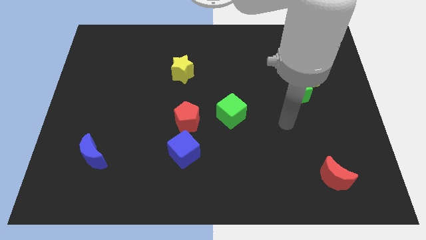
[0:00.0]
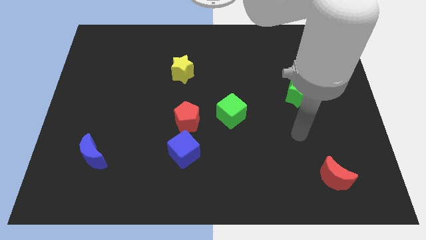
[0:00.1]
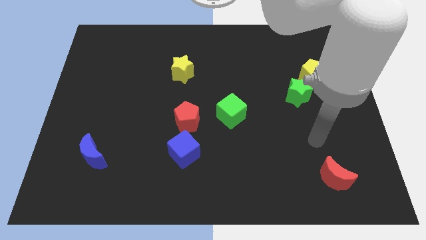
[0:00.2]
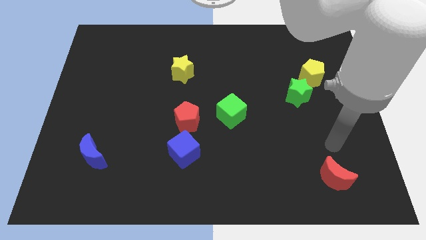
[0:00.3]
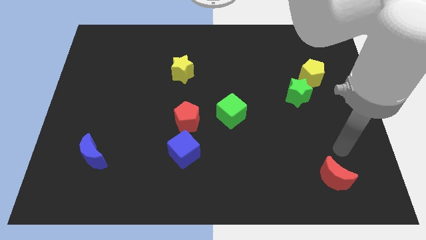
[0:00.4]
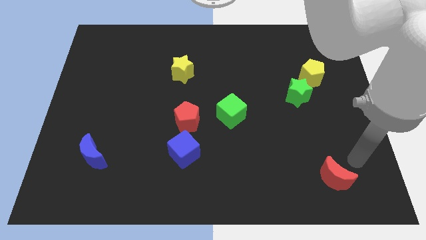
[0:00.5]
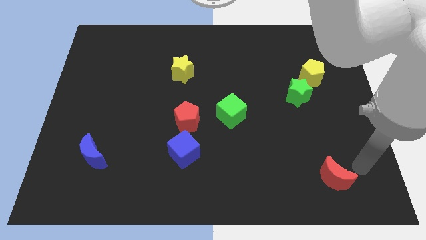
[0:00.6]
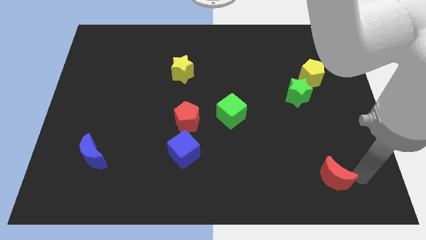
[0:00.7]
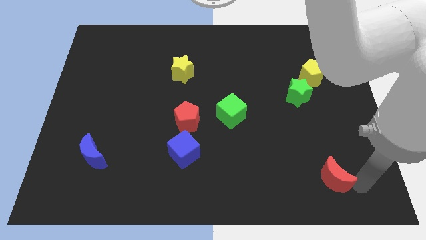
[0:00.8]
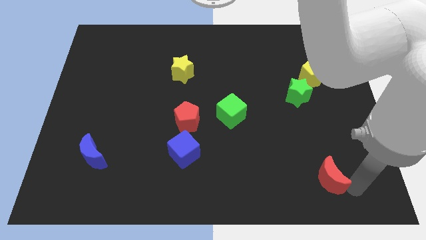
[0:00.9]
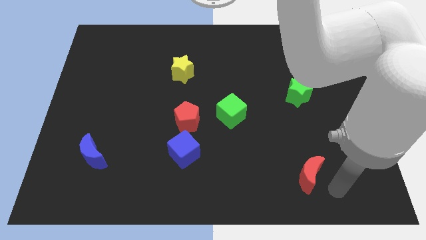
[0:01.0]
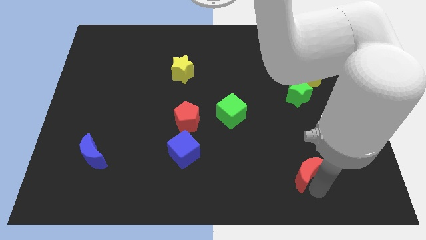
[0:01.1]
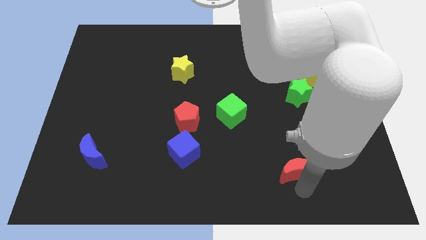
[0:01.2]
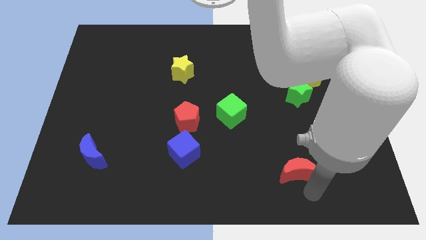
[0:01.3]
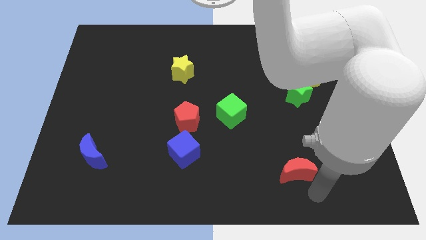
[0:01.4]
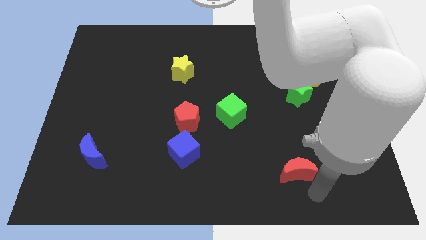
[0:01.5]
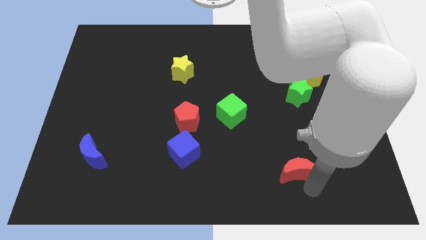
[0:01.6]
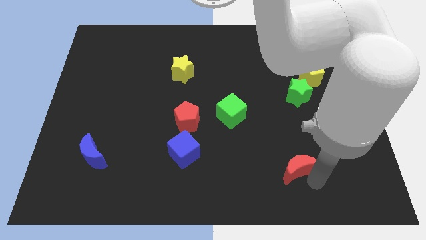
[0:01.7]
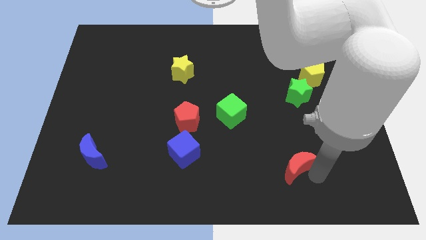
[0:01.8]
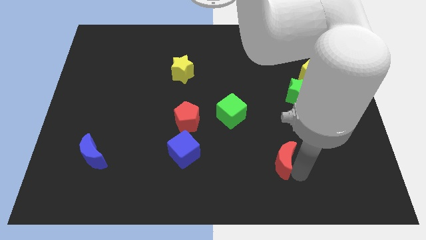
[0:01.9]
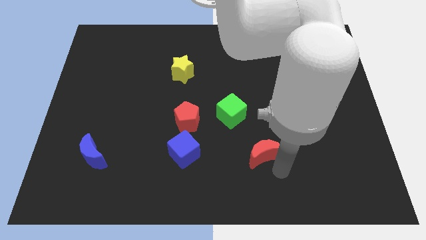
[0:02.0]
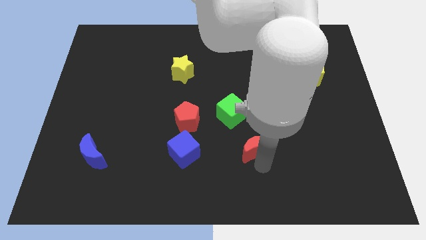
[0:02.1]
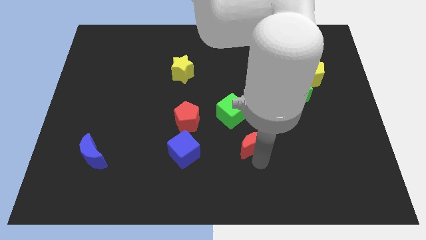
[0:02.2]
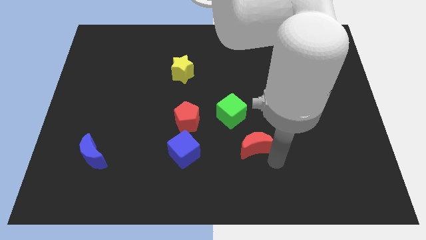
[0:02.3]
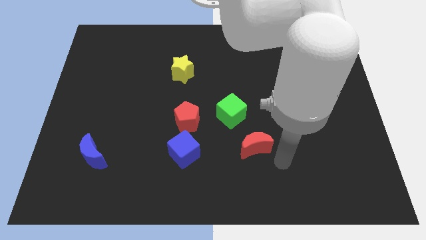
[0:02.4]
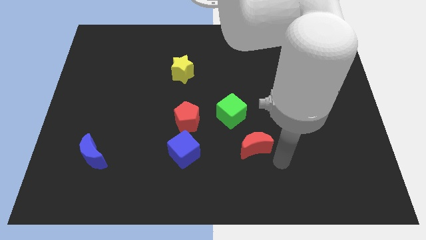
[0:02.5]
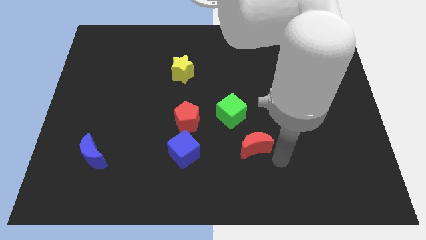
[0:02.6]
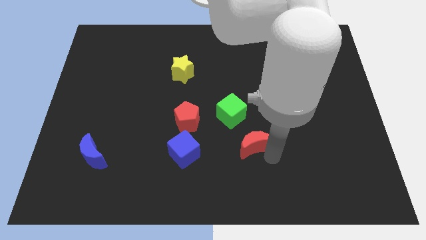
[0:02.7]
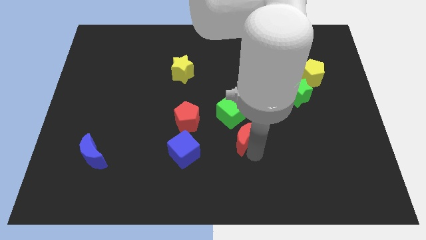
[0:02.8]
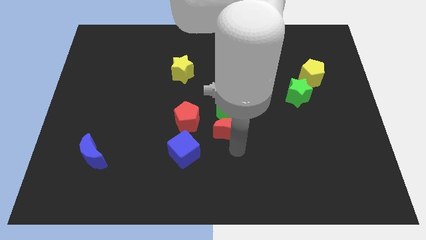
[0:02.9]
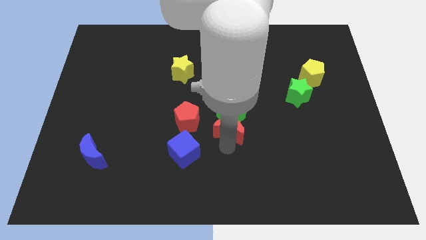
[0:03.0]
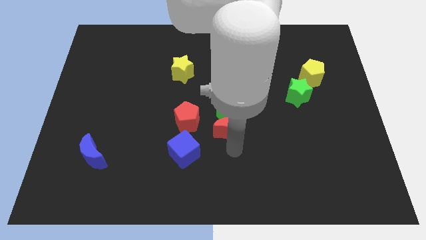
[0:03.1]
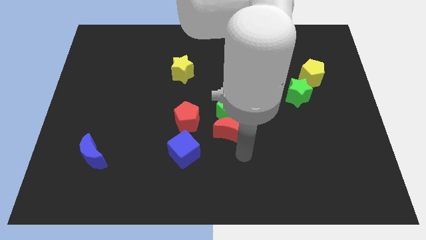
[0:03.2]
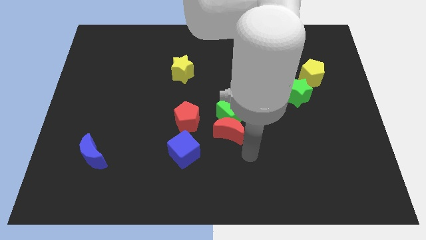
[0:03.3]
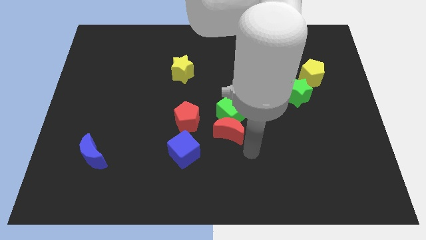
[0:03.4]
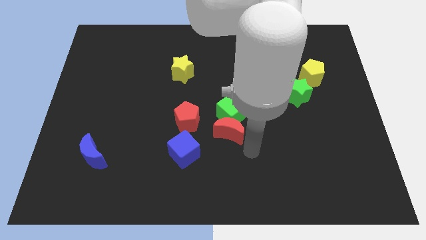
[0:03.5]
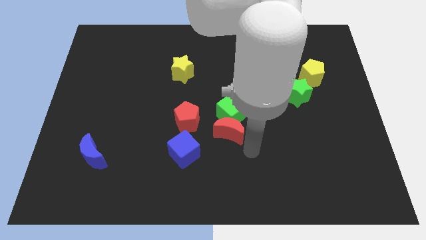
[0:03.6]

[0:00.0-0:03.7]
push the red crescent to the bottom of green cube

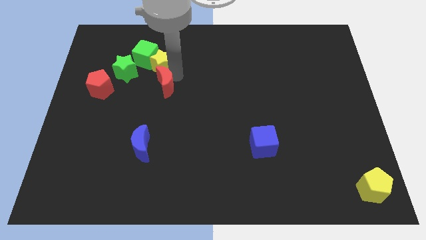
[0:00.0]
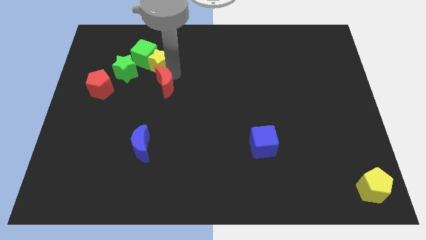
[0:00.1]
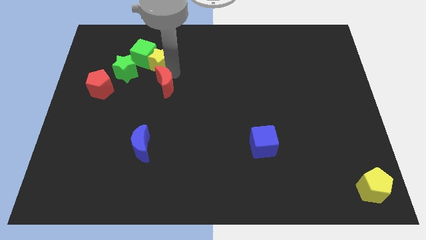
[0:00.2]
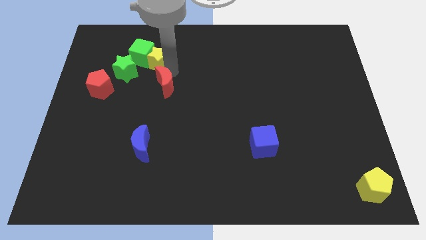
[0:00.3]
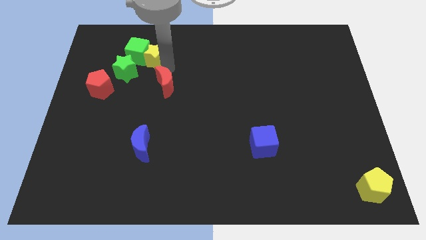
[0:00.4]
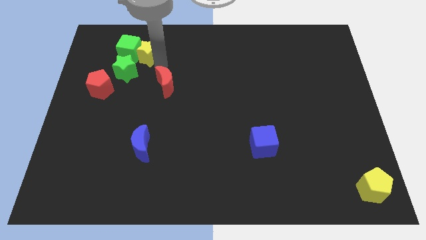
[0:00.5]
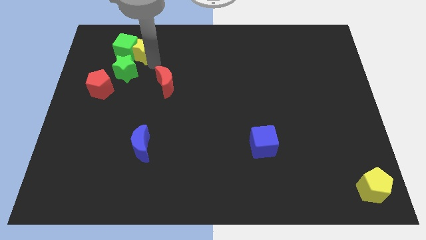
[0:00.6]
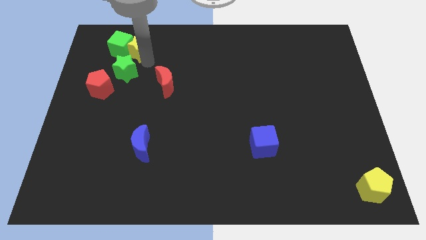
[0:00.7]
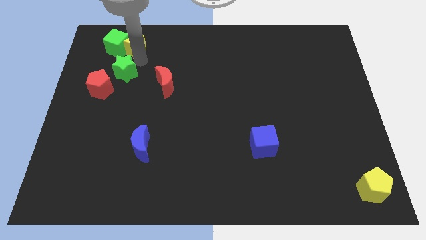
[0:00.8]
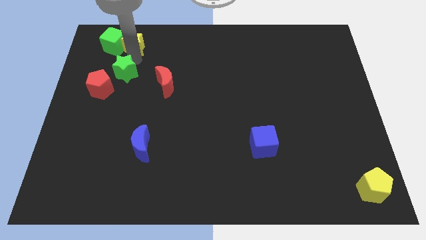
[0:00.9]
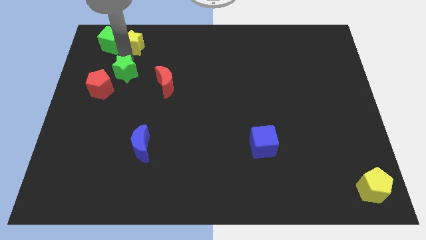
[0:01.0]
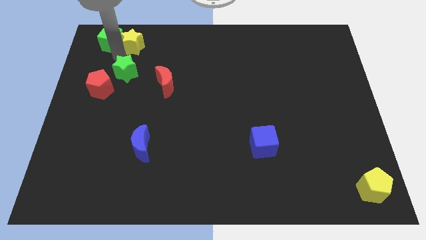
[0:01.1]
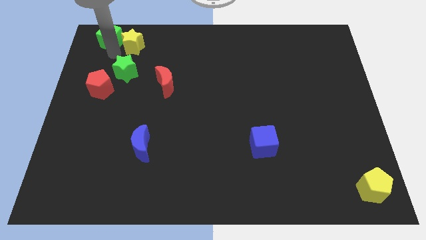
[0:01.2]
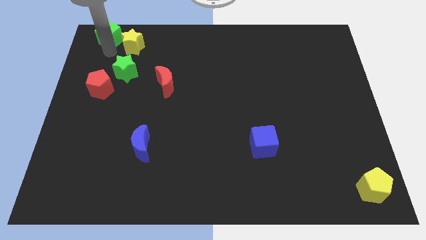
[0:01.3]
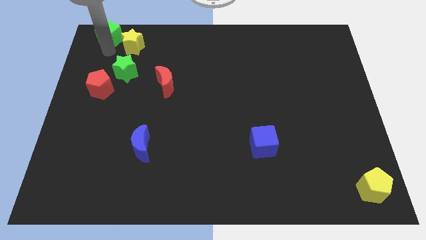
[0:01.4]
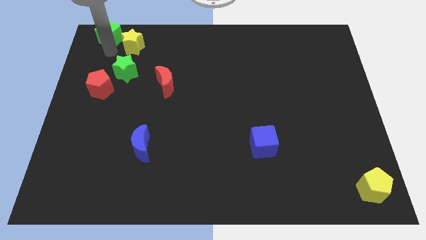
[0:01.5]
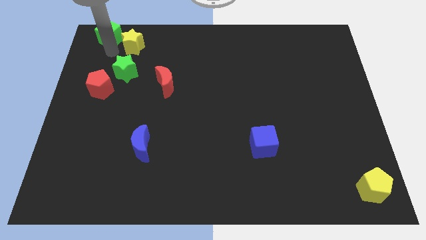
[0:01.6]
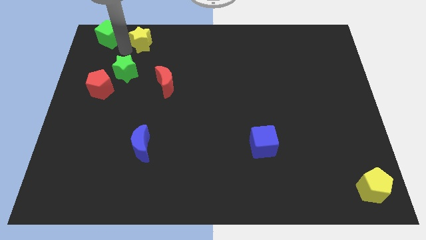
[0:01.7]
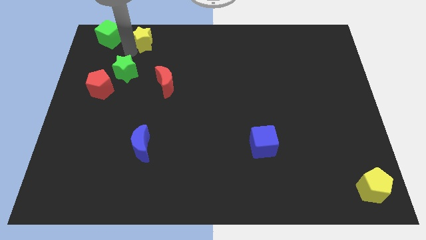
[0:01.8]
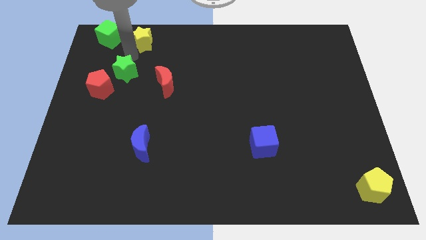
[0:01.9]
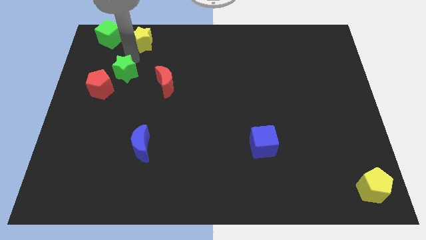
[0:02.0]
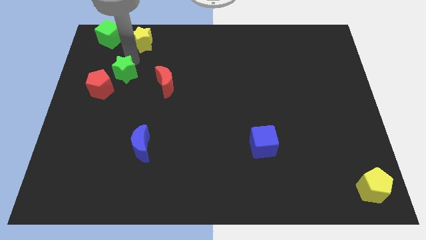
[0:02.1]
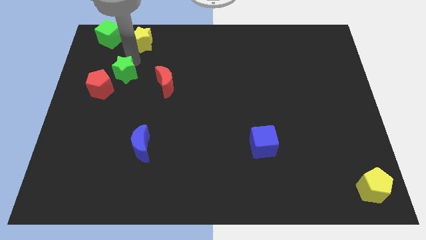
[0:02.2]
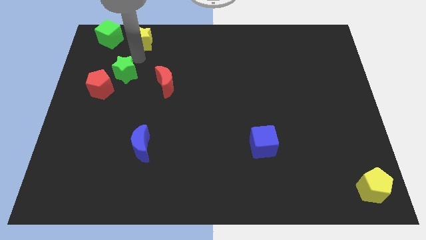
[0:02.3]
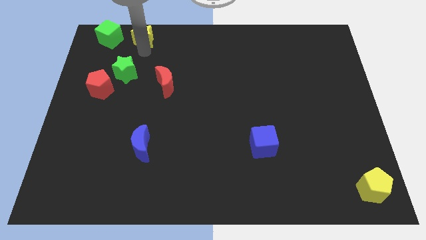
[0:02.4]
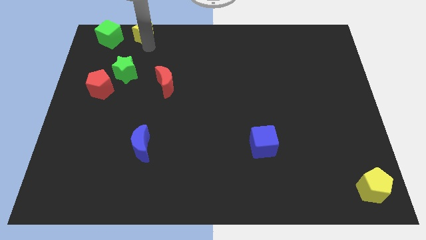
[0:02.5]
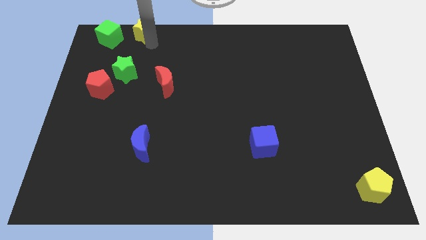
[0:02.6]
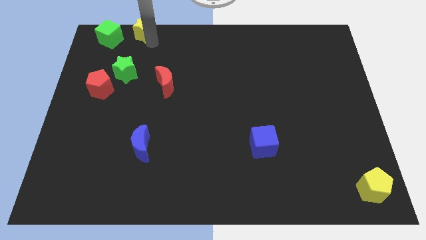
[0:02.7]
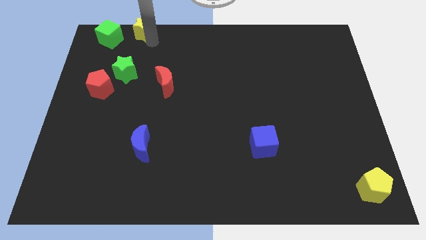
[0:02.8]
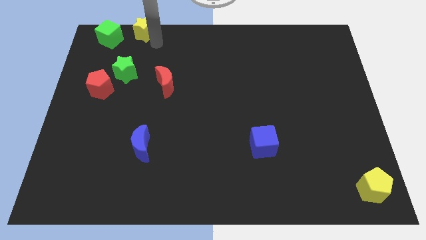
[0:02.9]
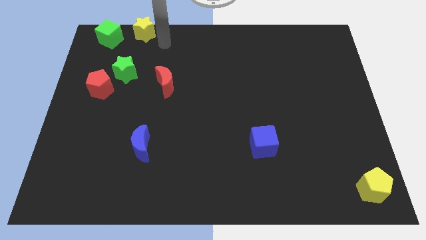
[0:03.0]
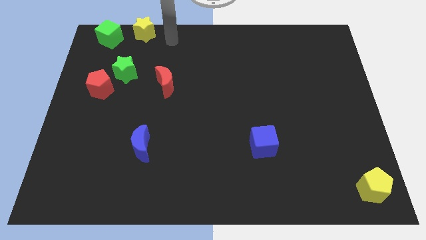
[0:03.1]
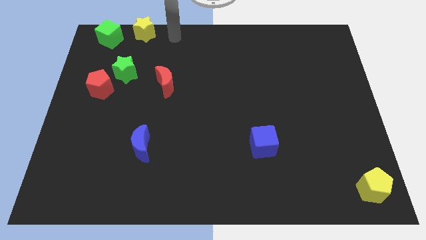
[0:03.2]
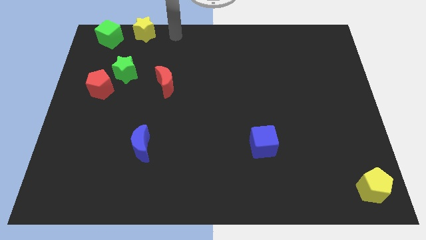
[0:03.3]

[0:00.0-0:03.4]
move the green cube and yellow star towards the top left corner of the board

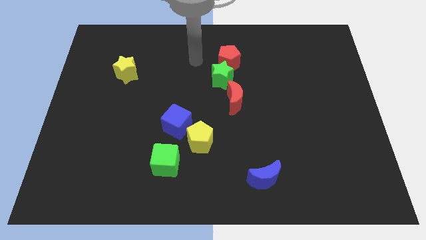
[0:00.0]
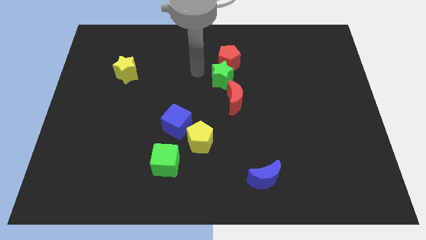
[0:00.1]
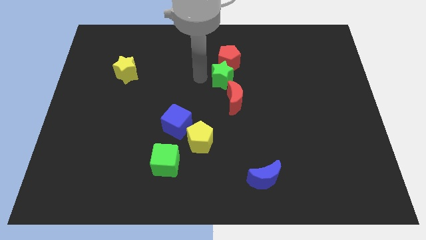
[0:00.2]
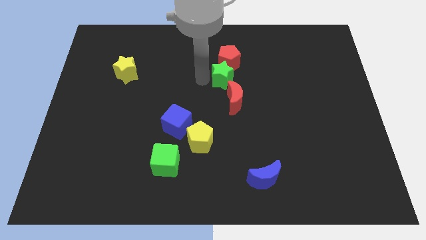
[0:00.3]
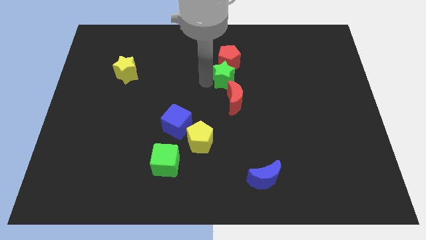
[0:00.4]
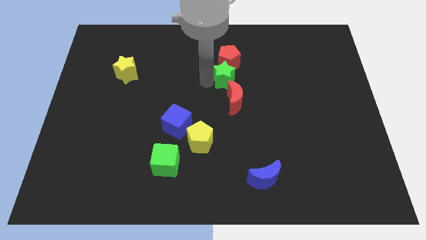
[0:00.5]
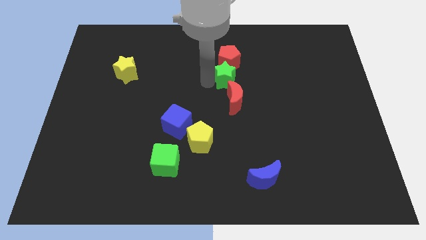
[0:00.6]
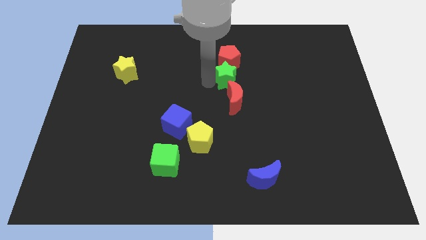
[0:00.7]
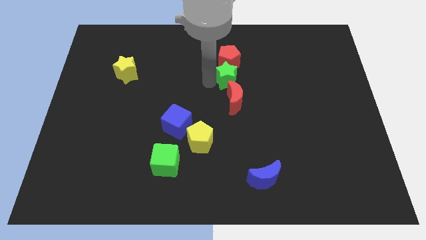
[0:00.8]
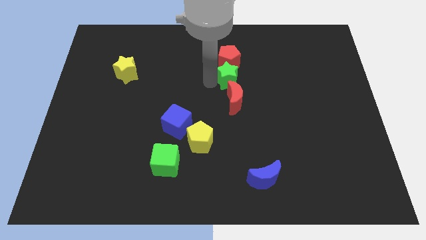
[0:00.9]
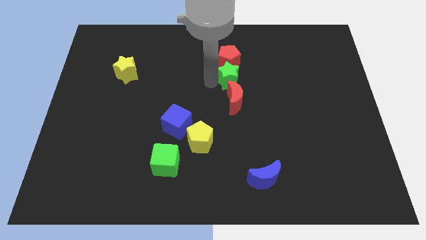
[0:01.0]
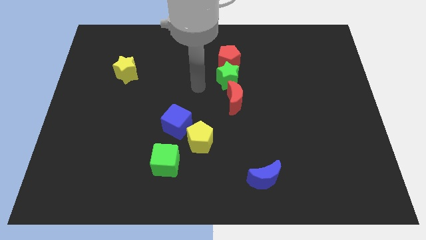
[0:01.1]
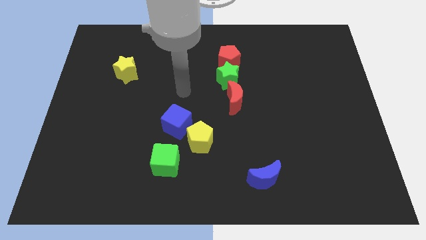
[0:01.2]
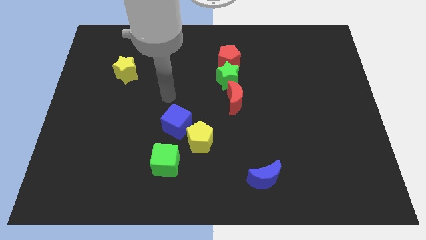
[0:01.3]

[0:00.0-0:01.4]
place green star in between red pentagon and red moon

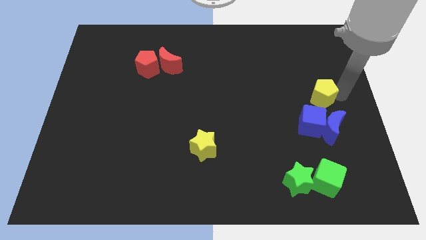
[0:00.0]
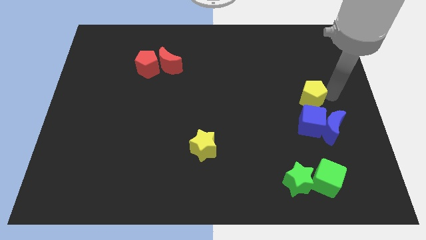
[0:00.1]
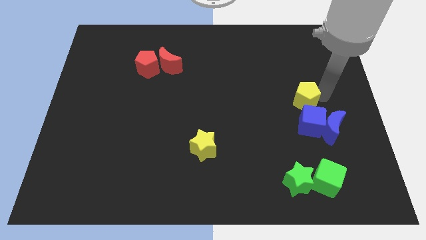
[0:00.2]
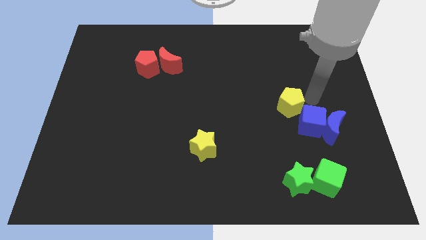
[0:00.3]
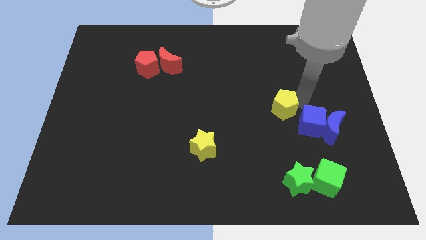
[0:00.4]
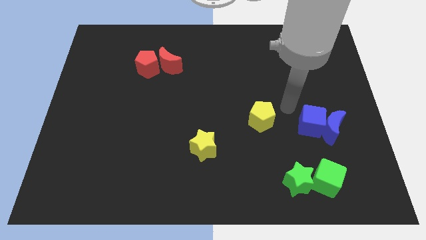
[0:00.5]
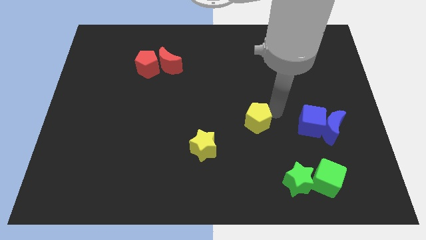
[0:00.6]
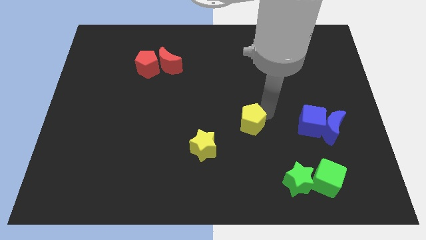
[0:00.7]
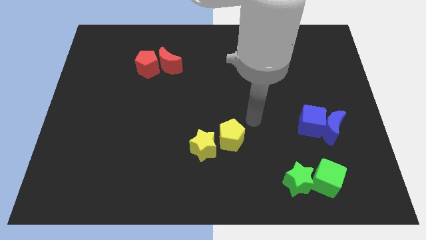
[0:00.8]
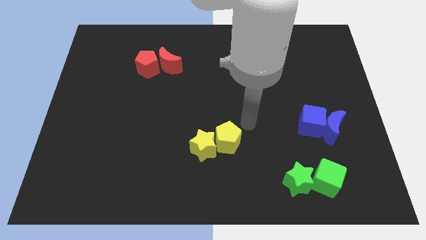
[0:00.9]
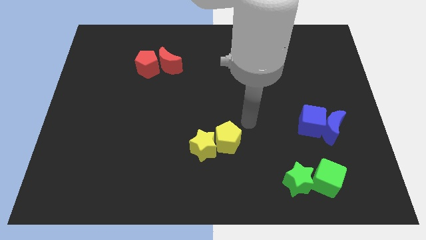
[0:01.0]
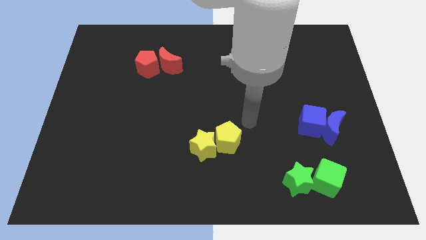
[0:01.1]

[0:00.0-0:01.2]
move the yellow pentagon right to yellow star
